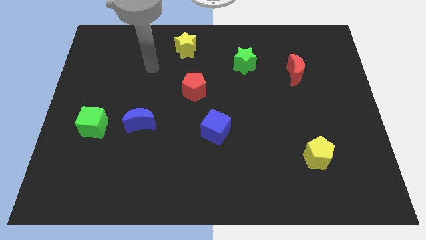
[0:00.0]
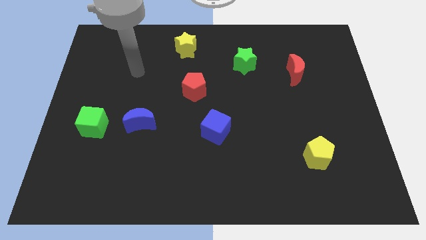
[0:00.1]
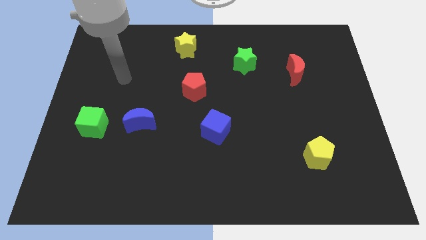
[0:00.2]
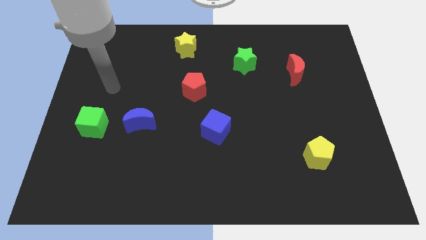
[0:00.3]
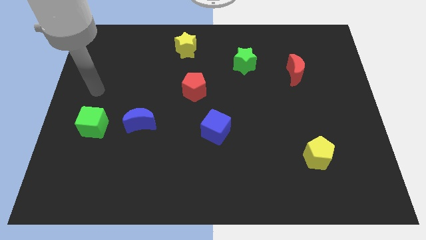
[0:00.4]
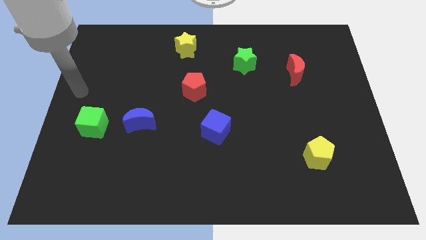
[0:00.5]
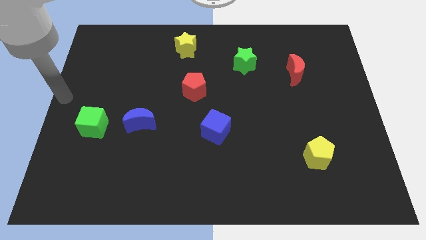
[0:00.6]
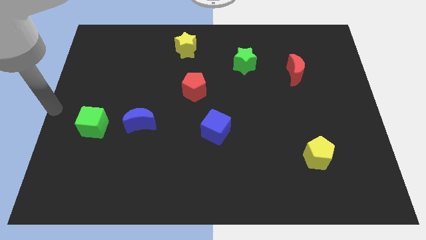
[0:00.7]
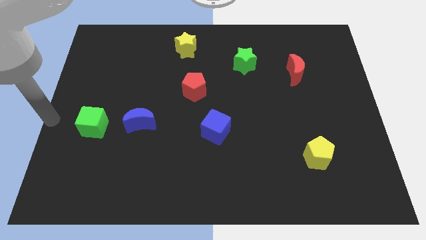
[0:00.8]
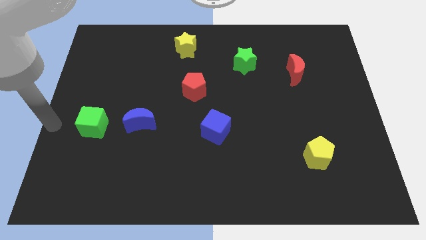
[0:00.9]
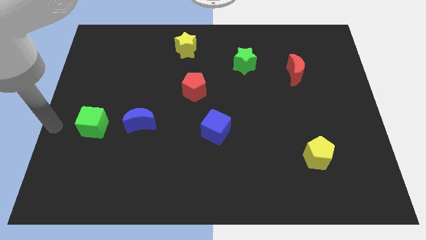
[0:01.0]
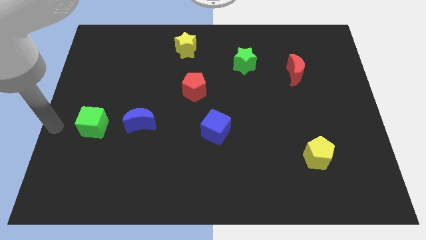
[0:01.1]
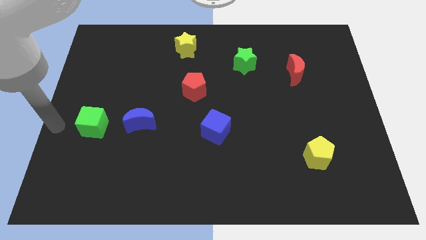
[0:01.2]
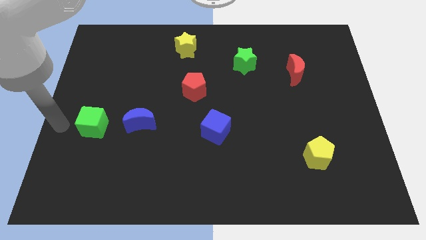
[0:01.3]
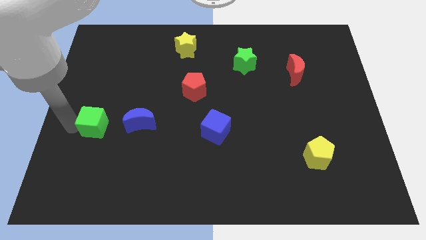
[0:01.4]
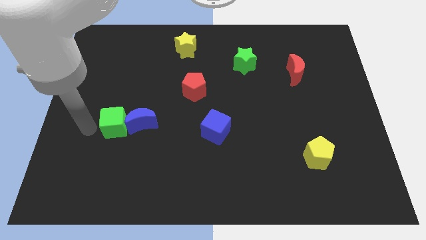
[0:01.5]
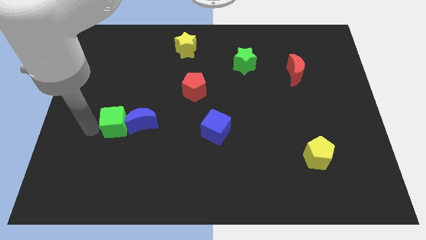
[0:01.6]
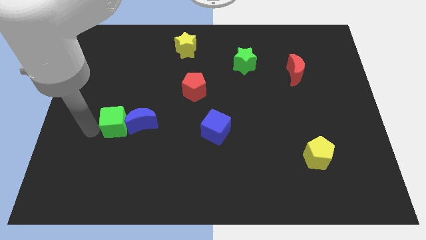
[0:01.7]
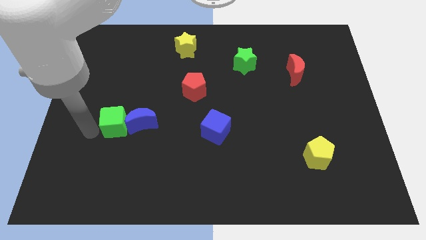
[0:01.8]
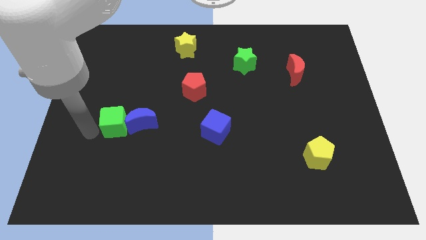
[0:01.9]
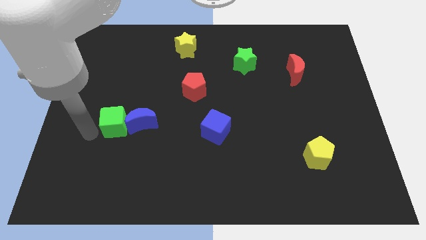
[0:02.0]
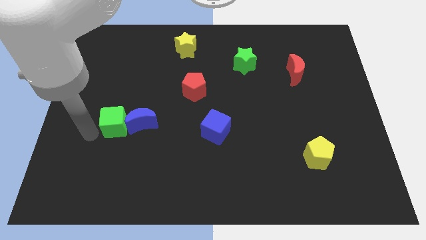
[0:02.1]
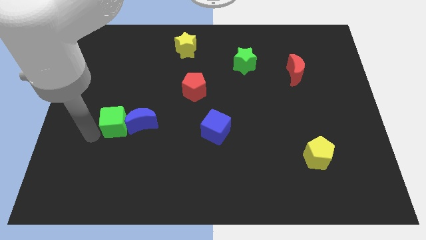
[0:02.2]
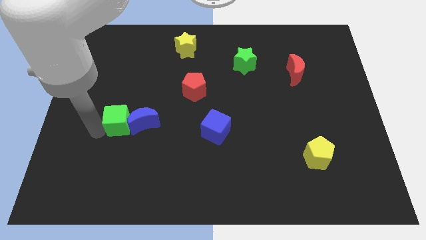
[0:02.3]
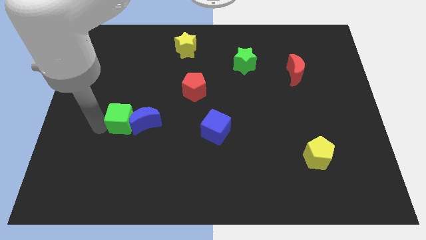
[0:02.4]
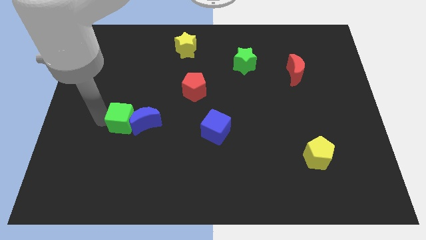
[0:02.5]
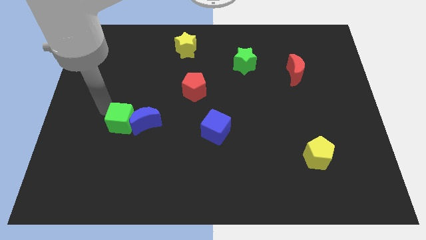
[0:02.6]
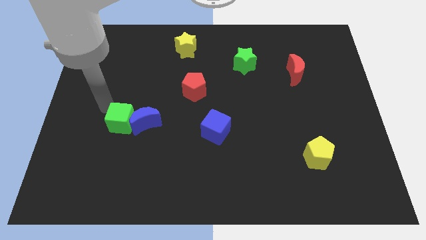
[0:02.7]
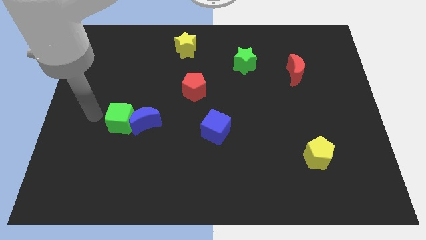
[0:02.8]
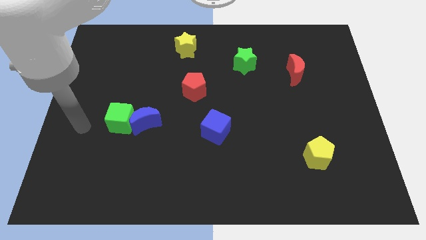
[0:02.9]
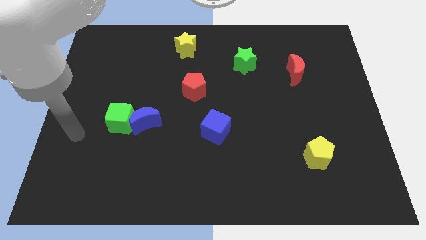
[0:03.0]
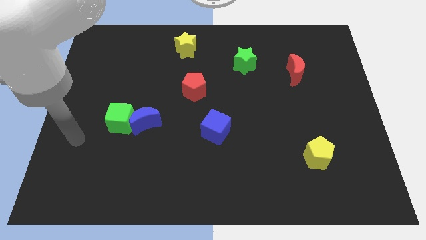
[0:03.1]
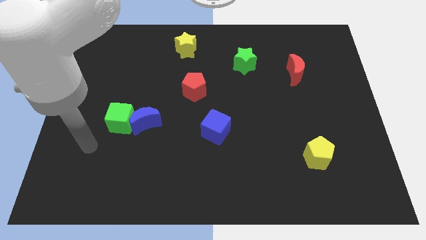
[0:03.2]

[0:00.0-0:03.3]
push the green cube into blue moon

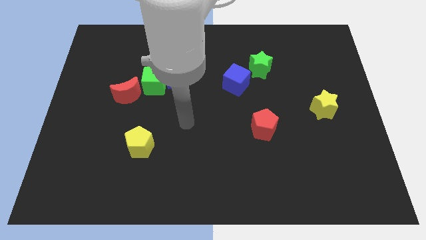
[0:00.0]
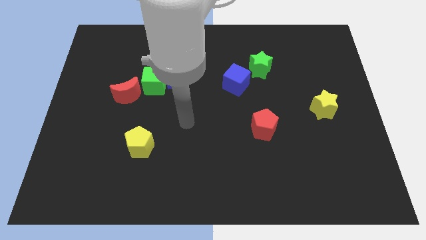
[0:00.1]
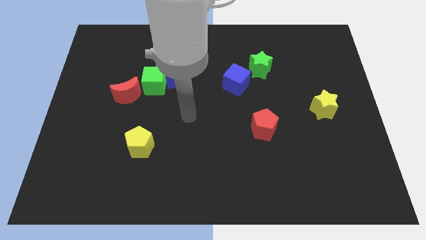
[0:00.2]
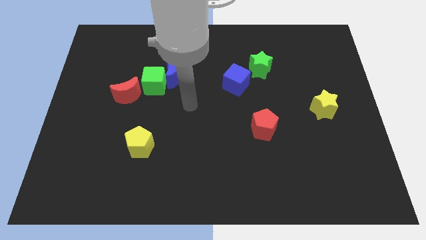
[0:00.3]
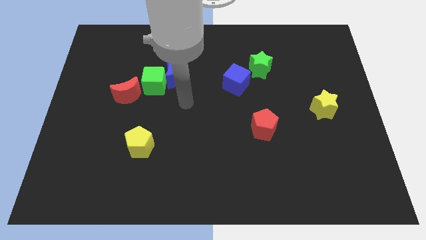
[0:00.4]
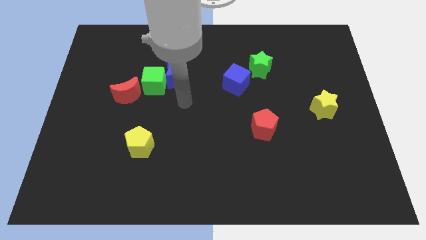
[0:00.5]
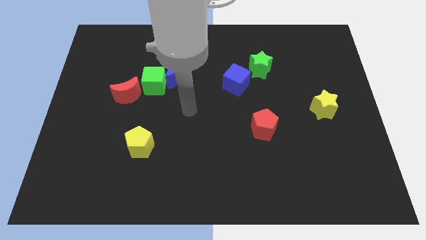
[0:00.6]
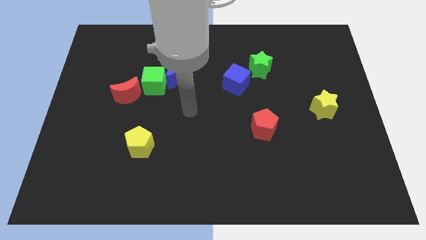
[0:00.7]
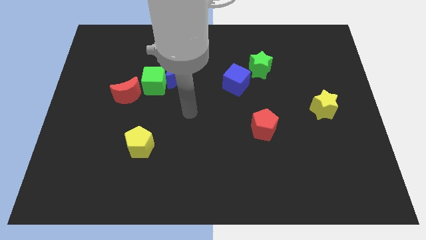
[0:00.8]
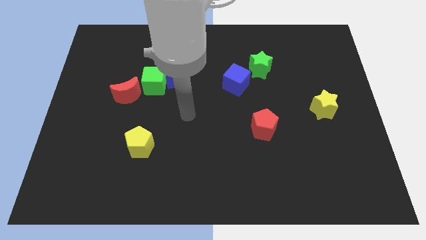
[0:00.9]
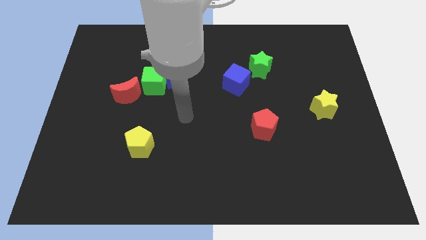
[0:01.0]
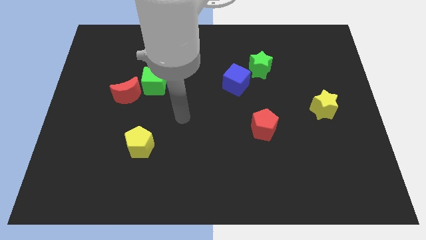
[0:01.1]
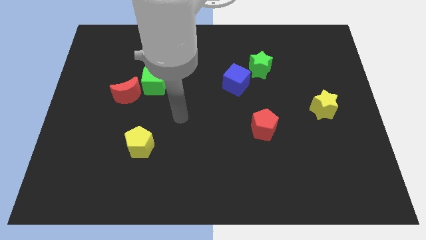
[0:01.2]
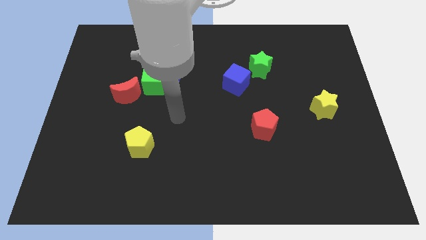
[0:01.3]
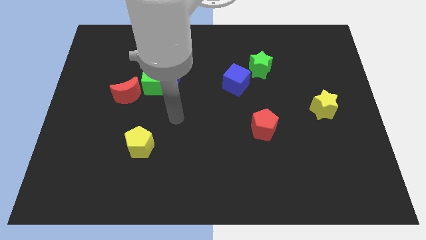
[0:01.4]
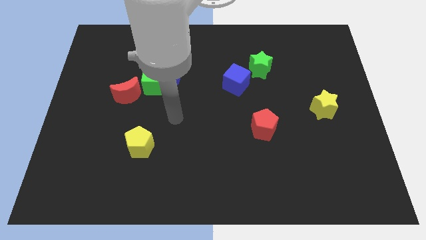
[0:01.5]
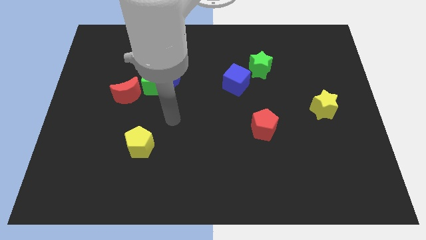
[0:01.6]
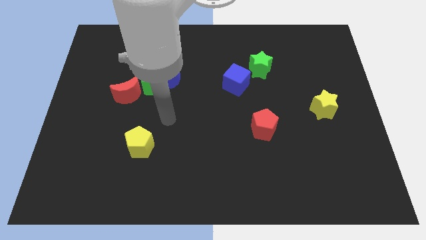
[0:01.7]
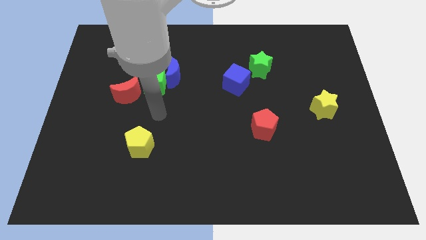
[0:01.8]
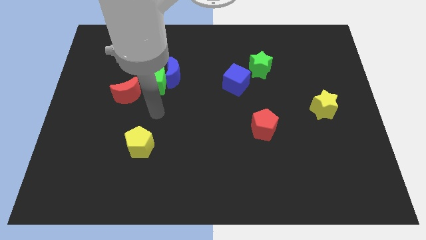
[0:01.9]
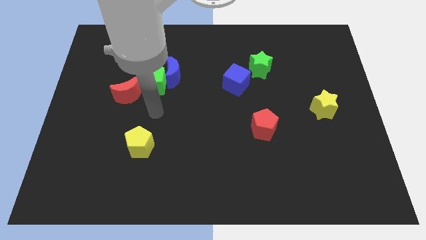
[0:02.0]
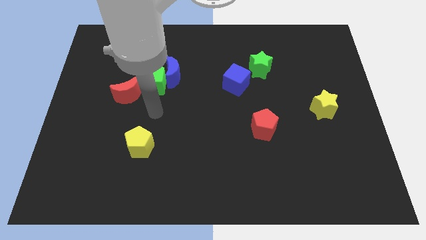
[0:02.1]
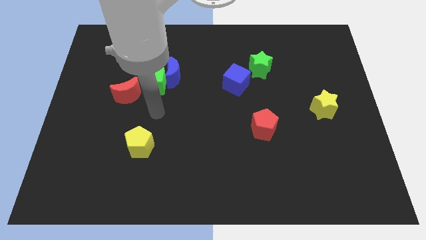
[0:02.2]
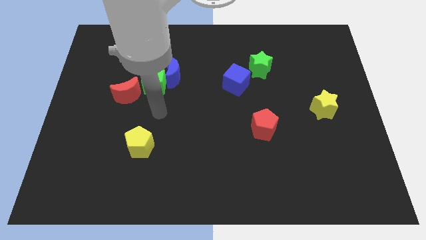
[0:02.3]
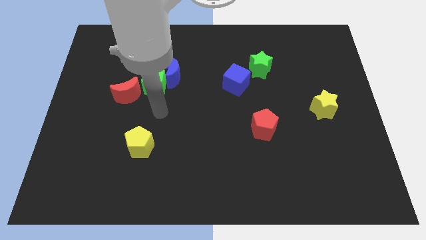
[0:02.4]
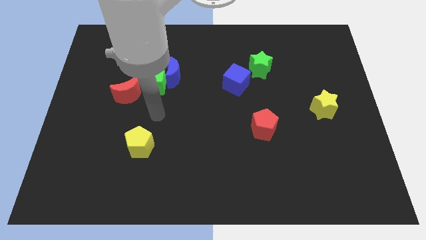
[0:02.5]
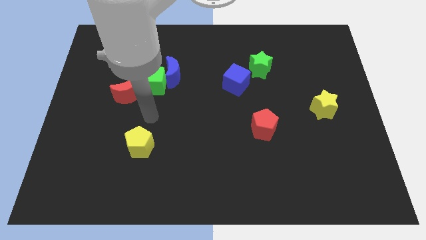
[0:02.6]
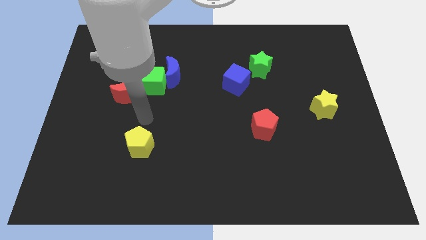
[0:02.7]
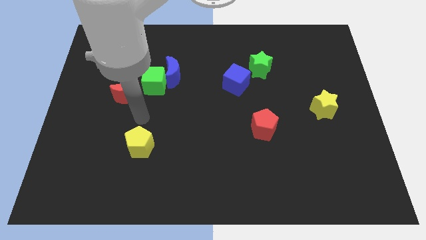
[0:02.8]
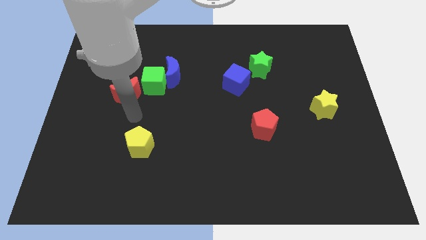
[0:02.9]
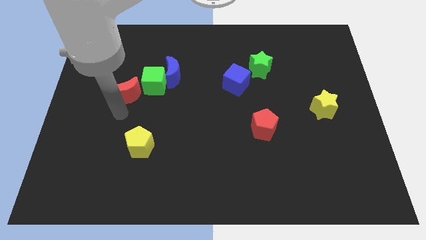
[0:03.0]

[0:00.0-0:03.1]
point your arm to the bottom of the red moon

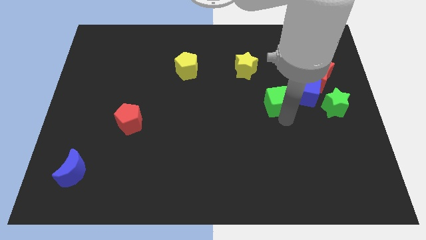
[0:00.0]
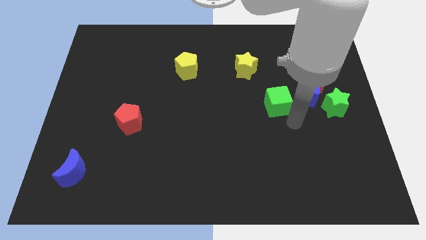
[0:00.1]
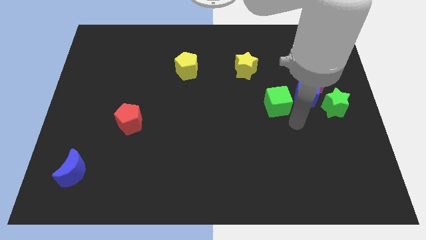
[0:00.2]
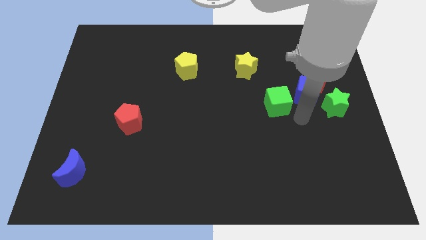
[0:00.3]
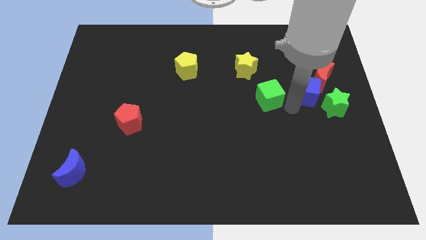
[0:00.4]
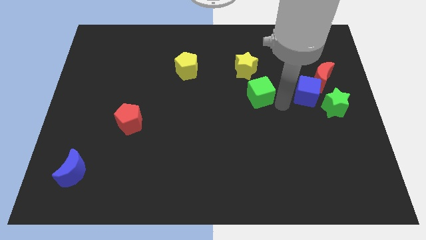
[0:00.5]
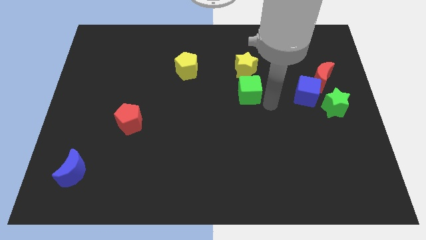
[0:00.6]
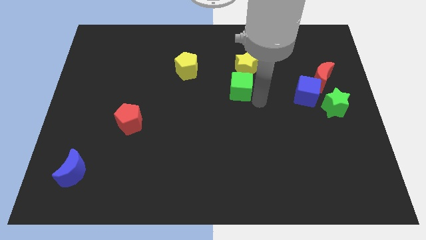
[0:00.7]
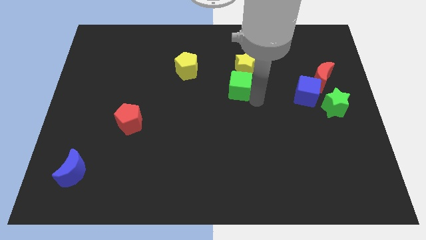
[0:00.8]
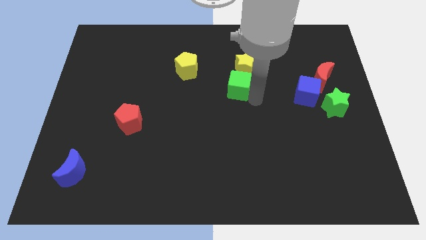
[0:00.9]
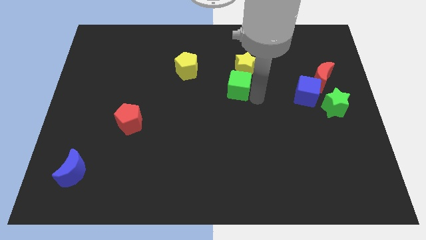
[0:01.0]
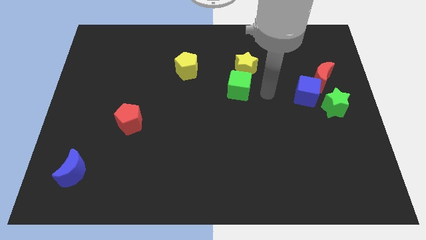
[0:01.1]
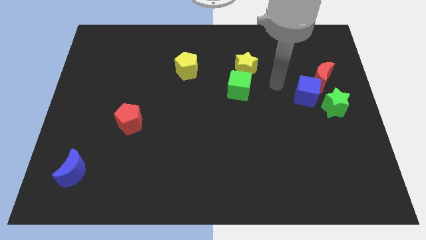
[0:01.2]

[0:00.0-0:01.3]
place the green cube below the yellow star

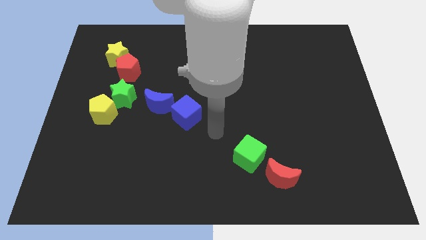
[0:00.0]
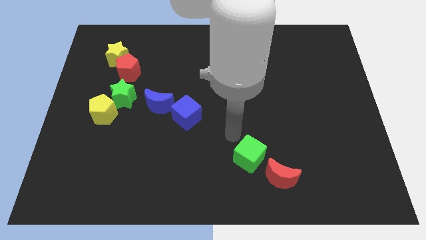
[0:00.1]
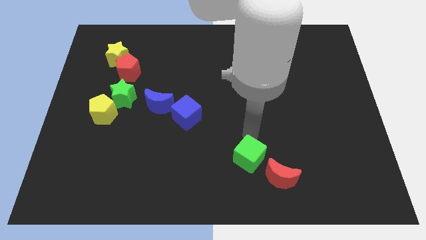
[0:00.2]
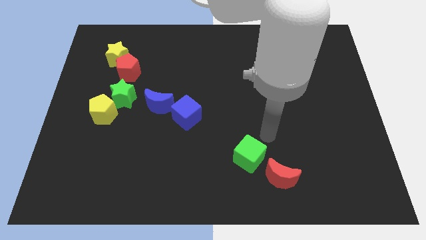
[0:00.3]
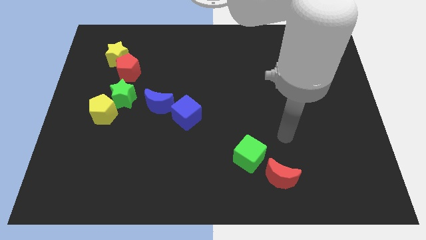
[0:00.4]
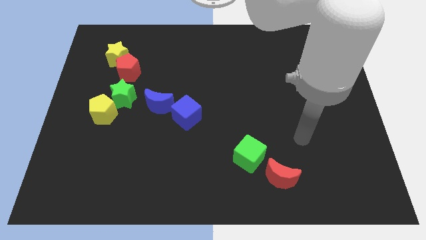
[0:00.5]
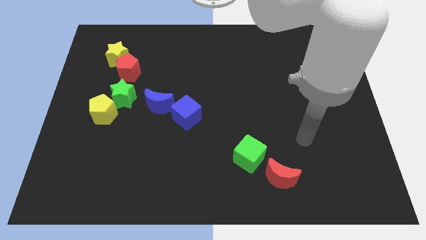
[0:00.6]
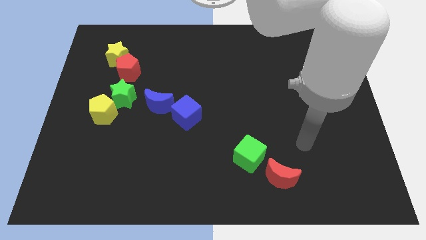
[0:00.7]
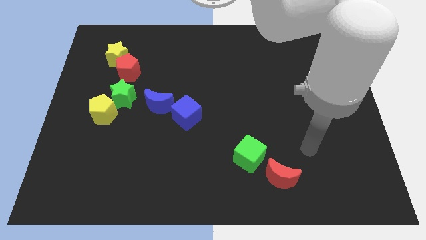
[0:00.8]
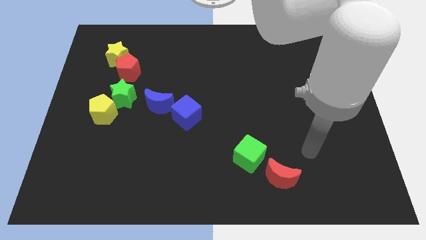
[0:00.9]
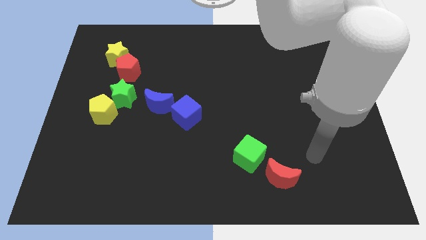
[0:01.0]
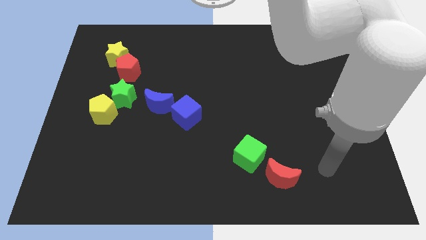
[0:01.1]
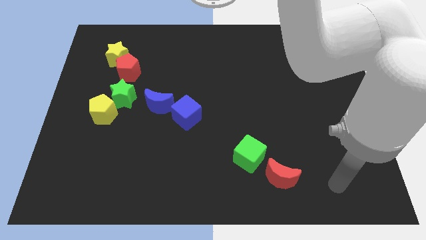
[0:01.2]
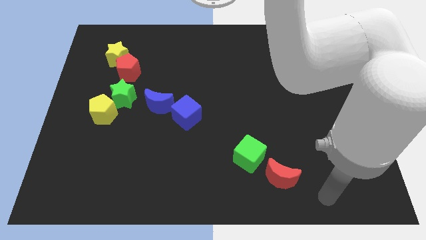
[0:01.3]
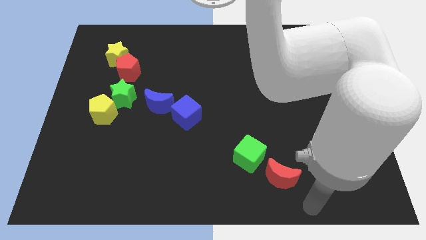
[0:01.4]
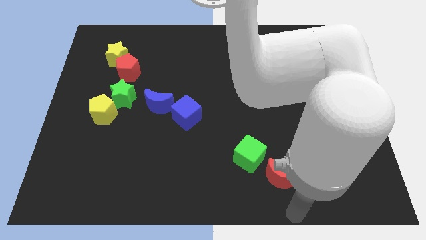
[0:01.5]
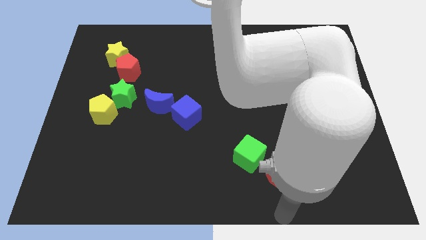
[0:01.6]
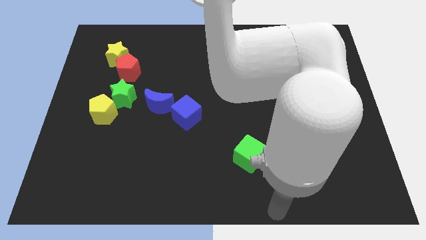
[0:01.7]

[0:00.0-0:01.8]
go and place your arm at the bottom side of the red crescent
